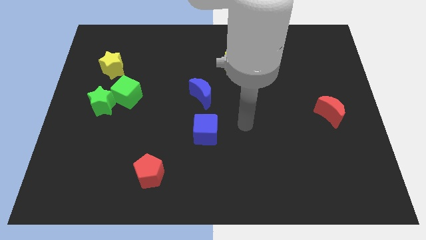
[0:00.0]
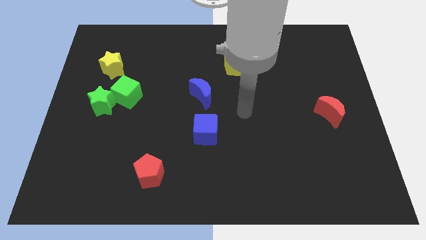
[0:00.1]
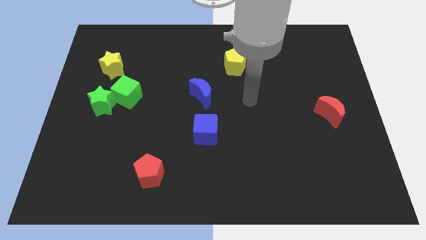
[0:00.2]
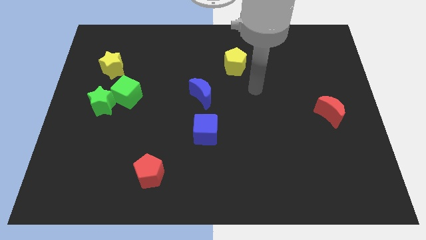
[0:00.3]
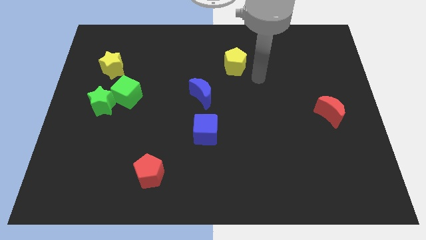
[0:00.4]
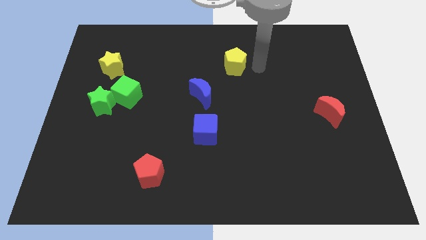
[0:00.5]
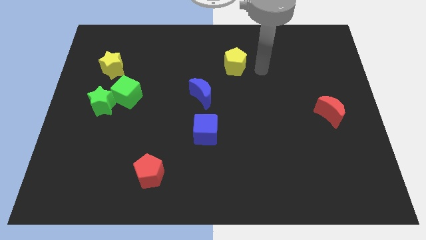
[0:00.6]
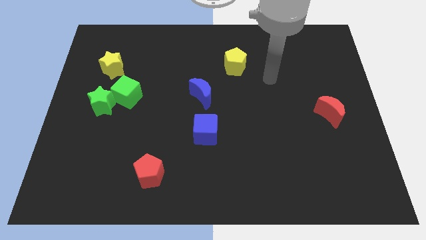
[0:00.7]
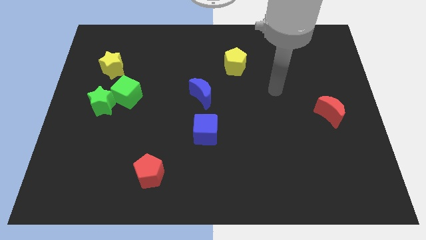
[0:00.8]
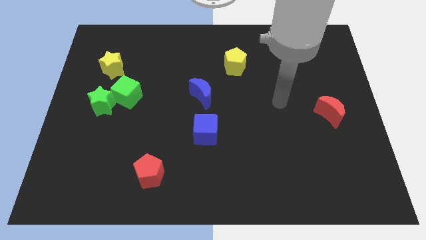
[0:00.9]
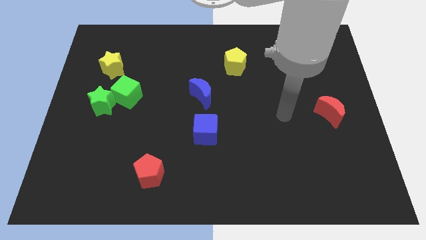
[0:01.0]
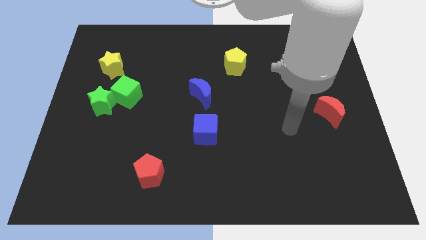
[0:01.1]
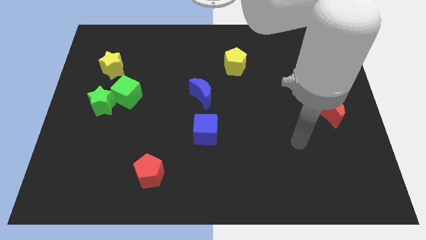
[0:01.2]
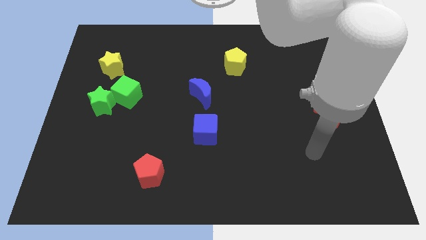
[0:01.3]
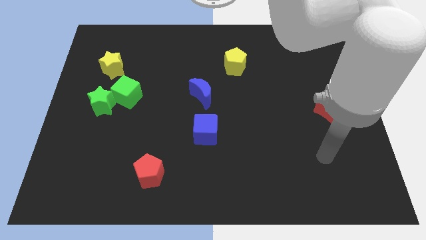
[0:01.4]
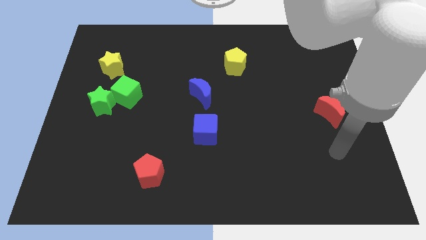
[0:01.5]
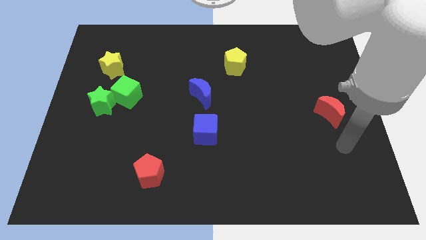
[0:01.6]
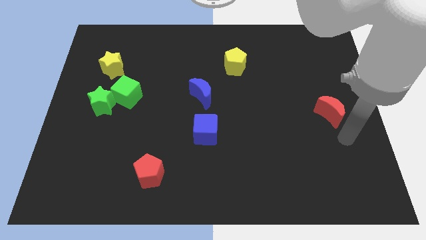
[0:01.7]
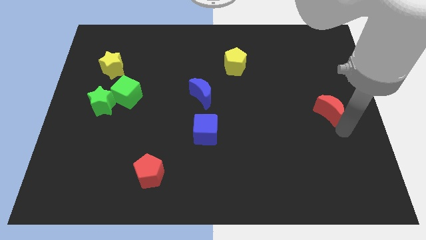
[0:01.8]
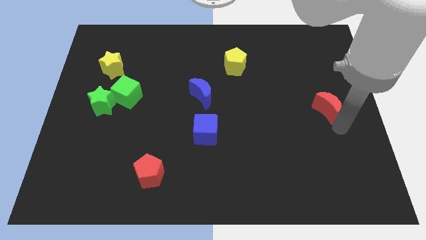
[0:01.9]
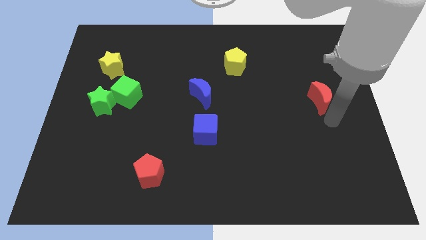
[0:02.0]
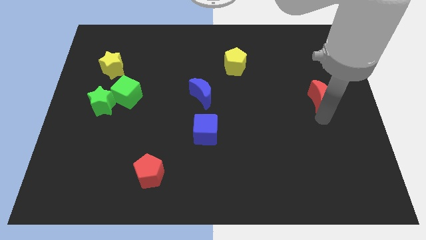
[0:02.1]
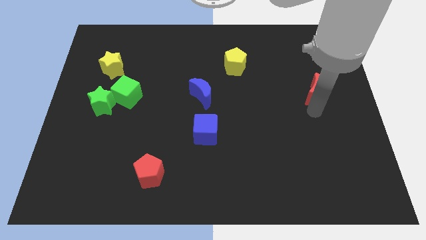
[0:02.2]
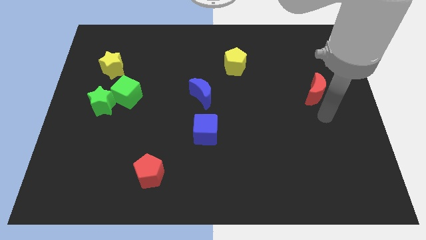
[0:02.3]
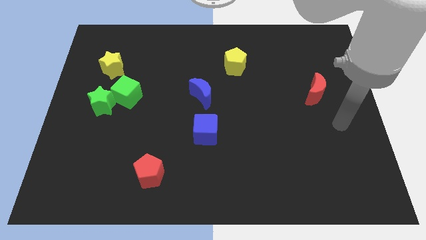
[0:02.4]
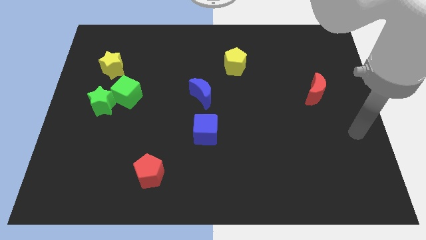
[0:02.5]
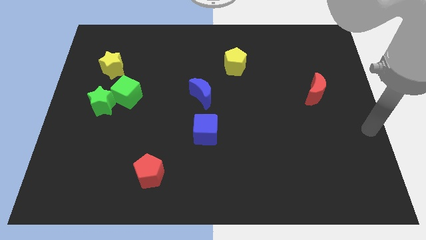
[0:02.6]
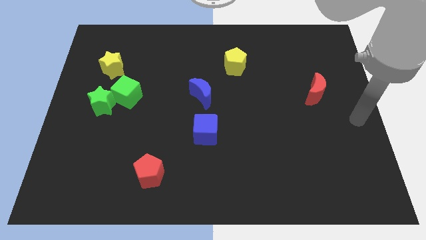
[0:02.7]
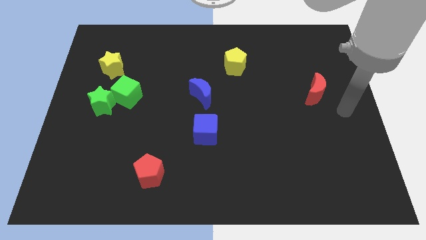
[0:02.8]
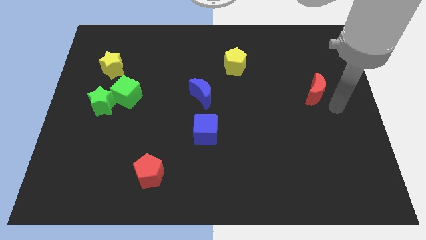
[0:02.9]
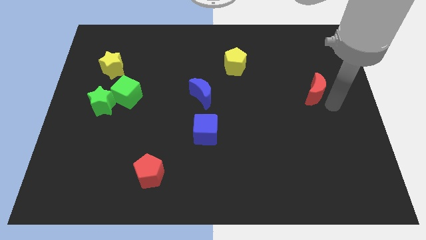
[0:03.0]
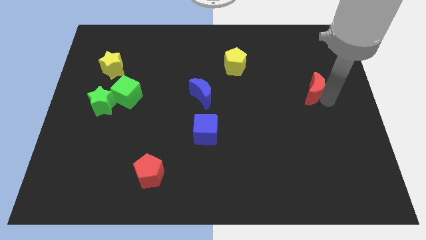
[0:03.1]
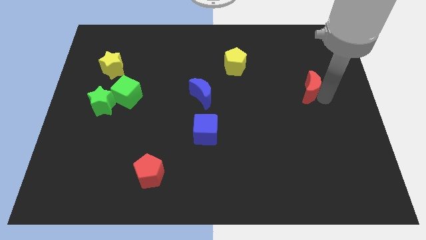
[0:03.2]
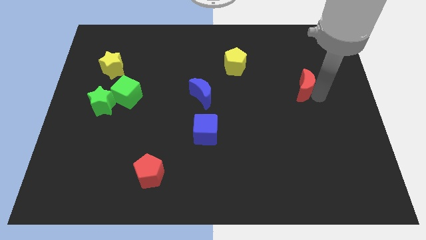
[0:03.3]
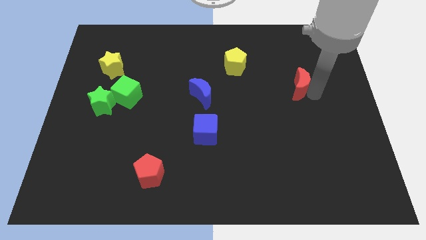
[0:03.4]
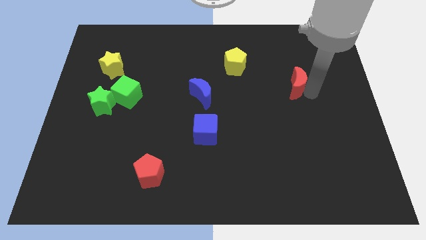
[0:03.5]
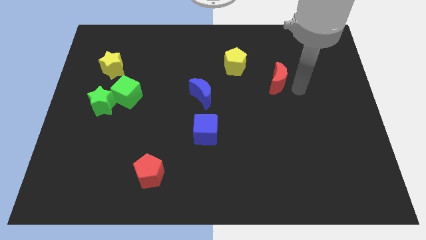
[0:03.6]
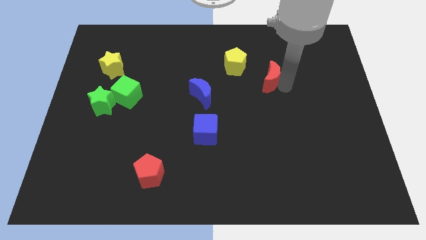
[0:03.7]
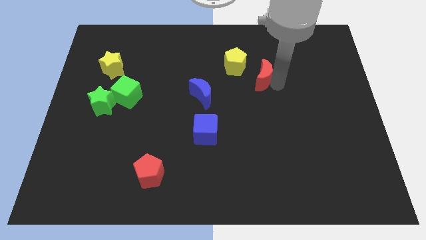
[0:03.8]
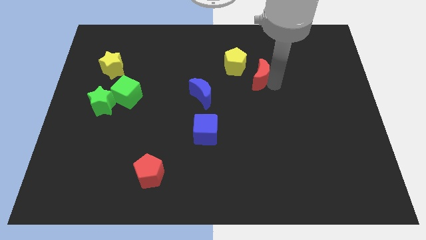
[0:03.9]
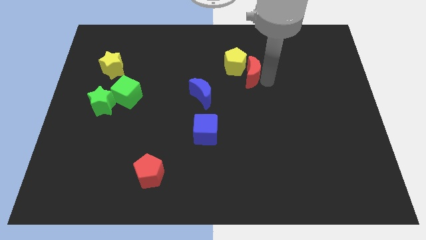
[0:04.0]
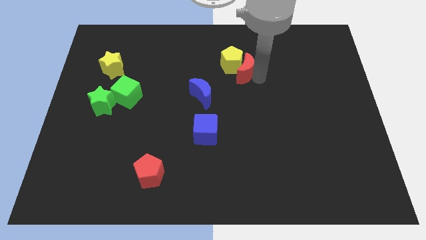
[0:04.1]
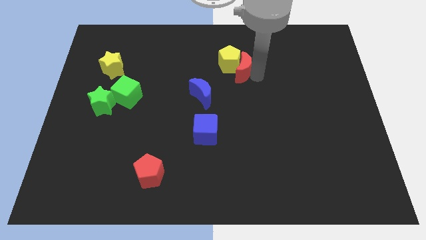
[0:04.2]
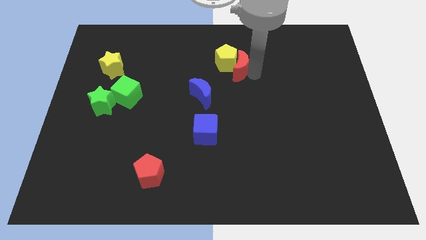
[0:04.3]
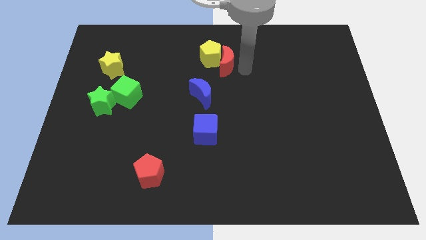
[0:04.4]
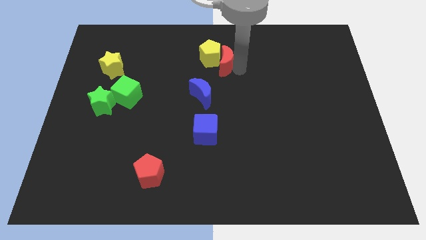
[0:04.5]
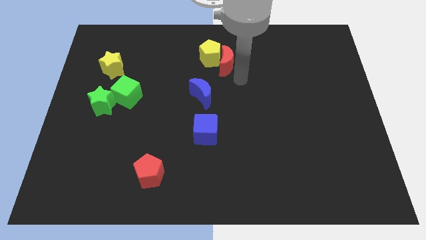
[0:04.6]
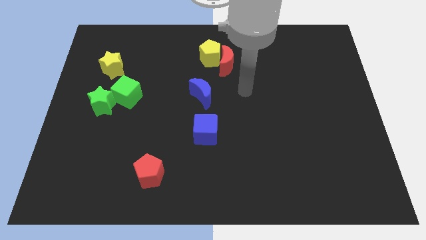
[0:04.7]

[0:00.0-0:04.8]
move red crescent into the yellow pentagon

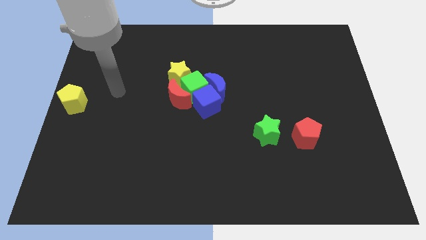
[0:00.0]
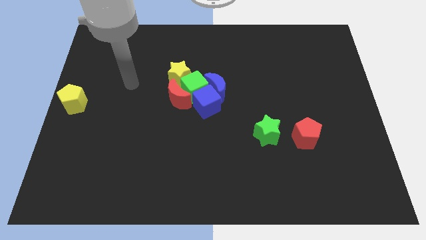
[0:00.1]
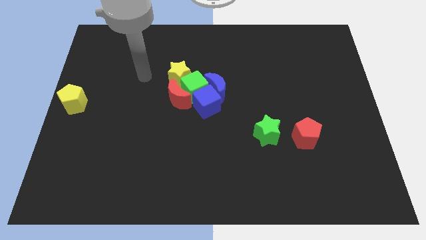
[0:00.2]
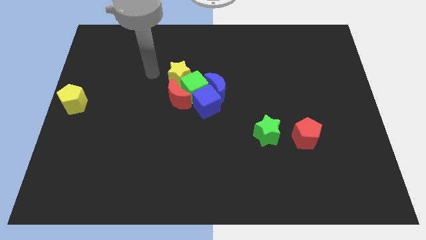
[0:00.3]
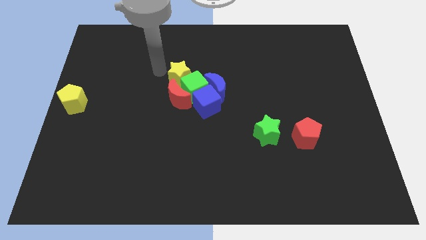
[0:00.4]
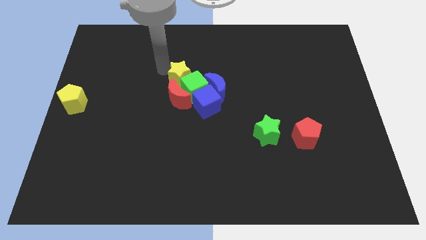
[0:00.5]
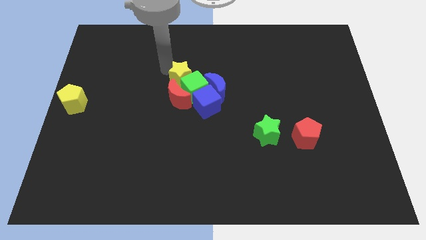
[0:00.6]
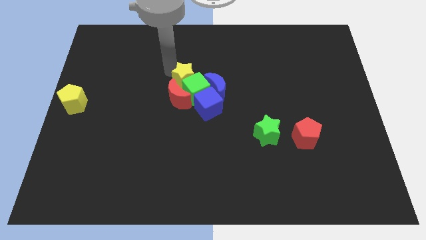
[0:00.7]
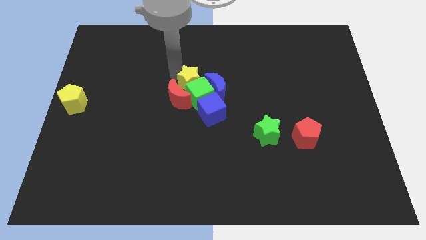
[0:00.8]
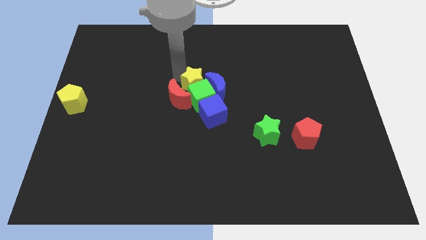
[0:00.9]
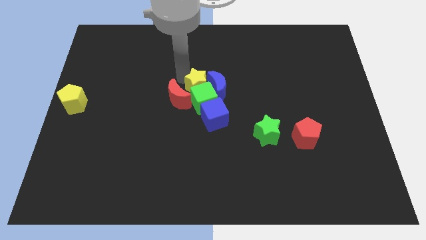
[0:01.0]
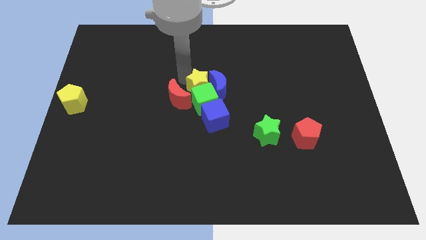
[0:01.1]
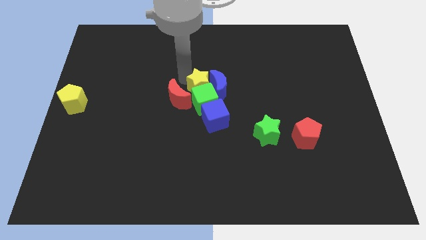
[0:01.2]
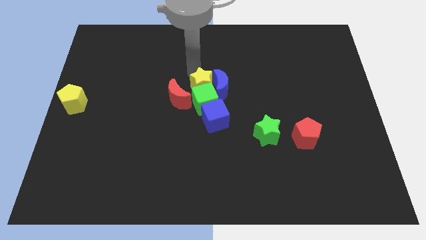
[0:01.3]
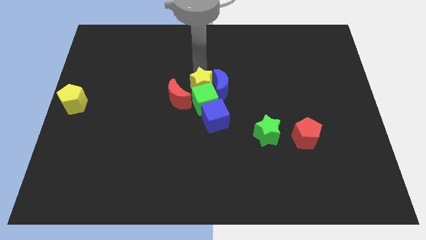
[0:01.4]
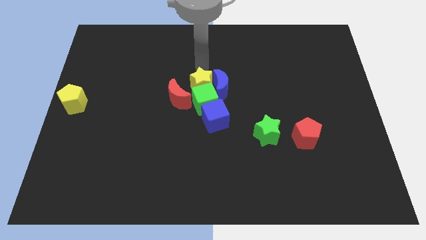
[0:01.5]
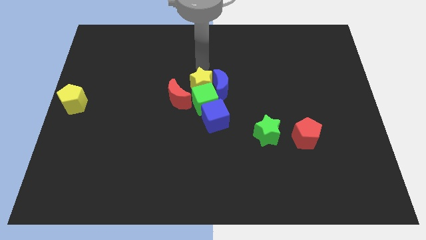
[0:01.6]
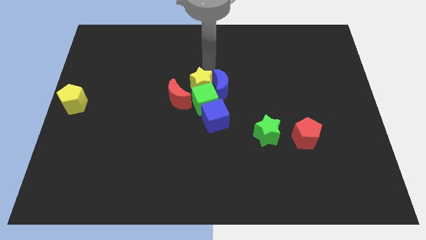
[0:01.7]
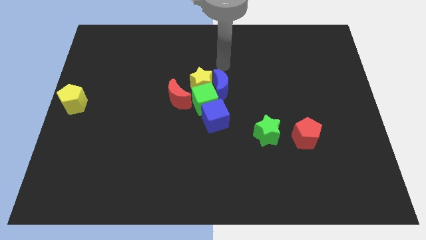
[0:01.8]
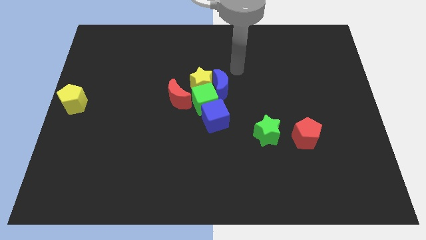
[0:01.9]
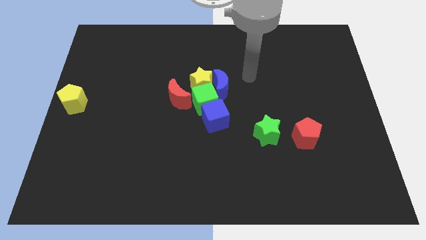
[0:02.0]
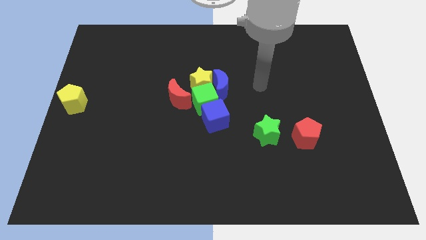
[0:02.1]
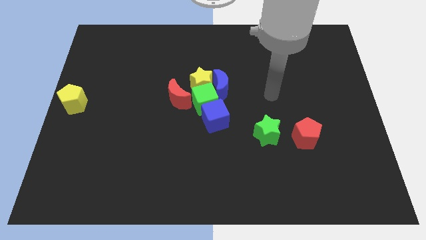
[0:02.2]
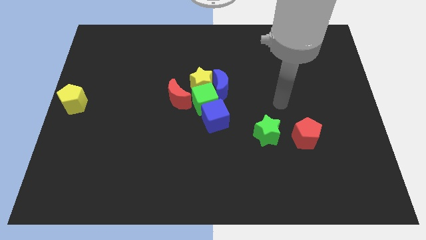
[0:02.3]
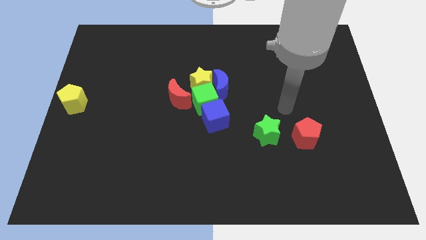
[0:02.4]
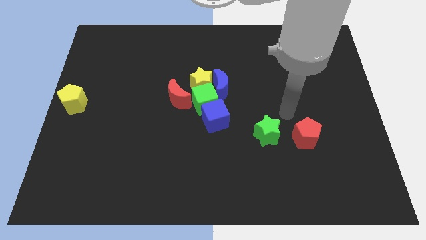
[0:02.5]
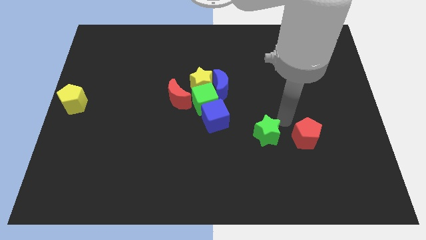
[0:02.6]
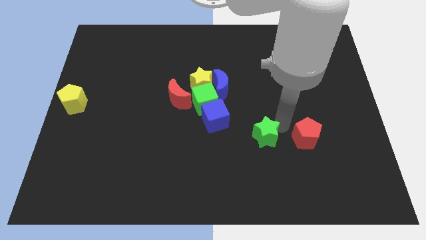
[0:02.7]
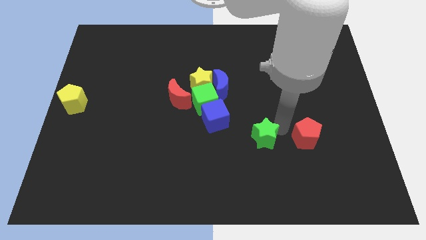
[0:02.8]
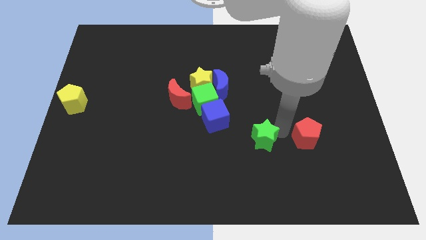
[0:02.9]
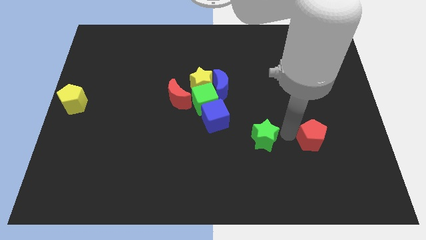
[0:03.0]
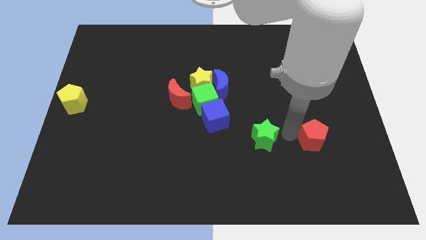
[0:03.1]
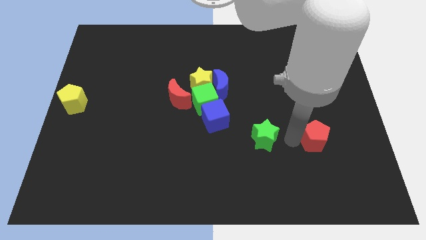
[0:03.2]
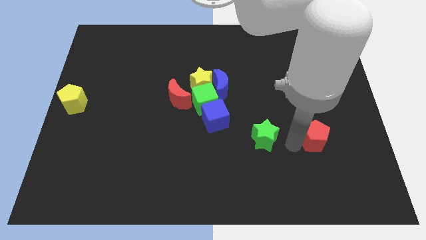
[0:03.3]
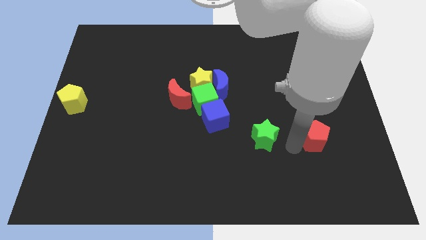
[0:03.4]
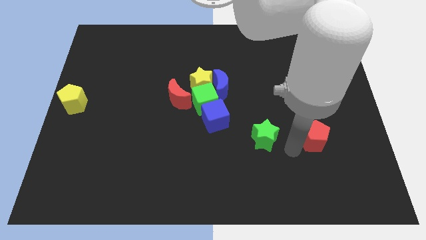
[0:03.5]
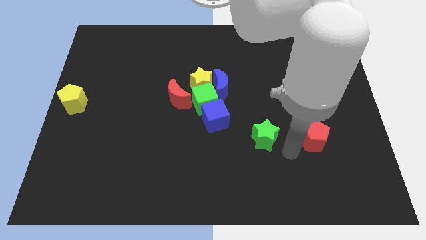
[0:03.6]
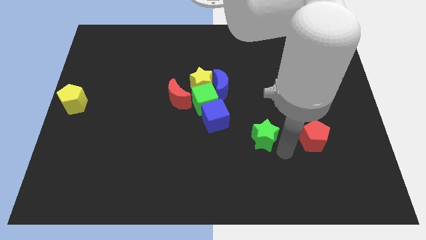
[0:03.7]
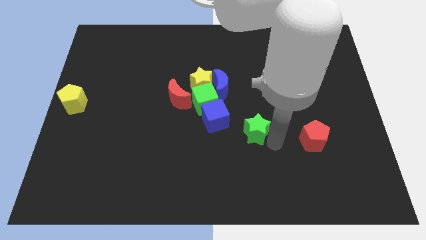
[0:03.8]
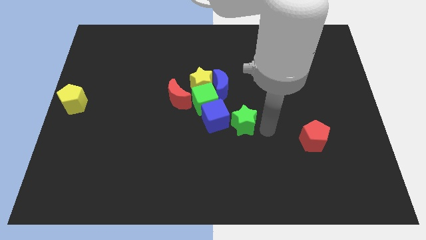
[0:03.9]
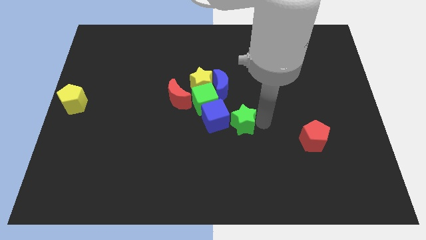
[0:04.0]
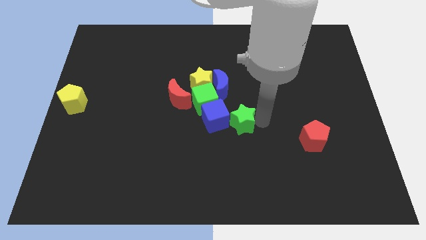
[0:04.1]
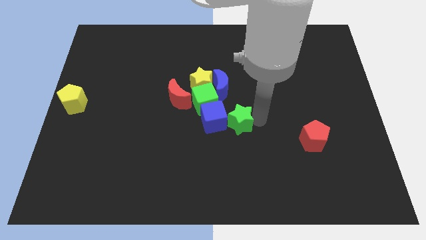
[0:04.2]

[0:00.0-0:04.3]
drag the green star to the group of blocks
